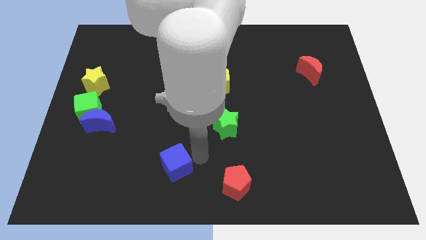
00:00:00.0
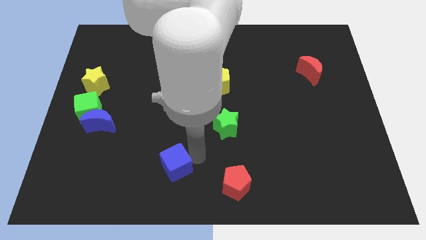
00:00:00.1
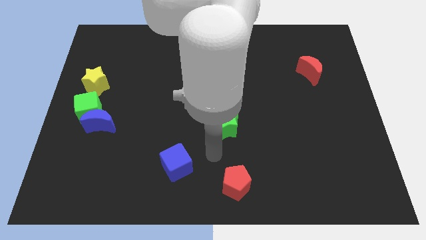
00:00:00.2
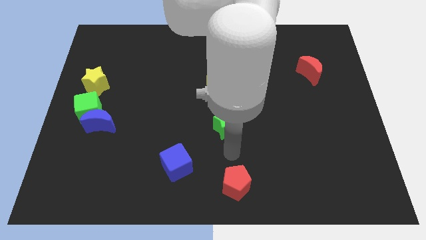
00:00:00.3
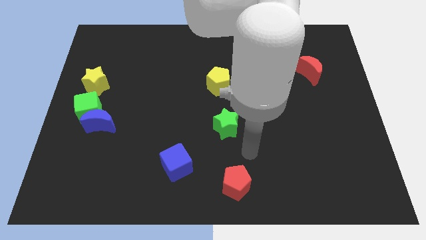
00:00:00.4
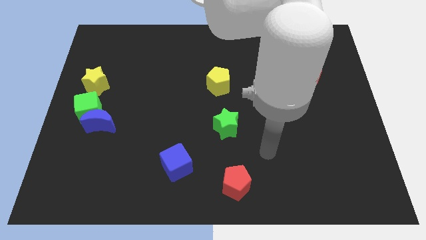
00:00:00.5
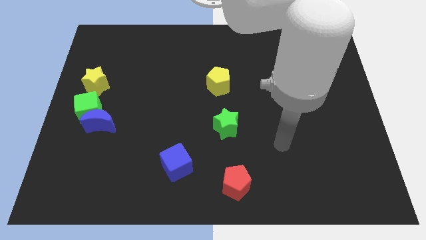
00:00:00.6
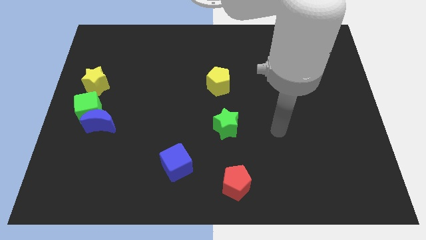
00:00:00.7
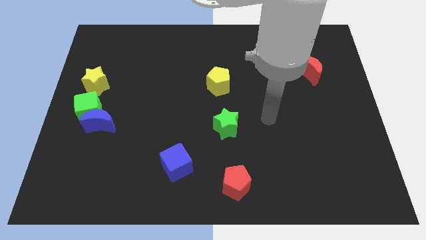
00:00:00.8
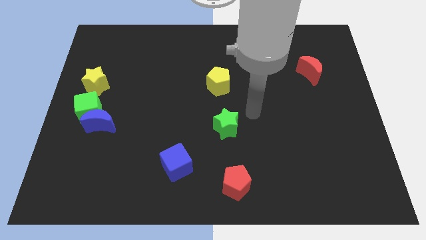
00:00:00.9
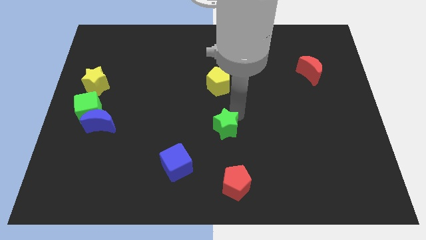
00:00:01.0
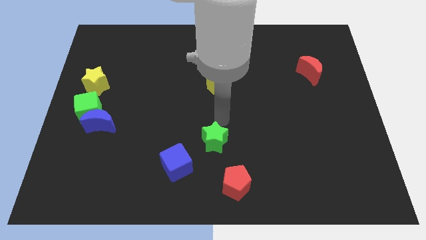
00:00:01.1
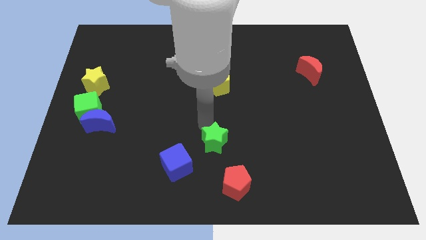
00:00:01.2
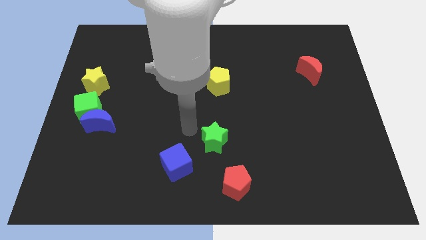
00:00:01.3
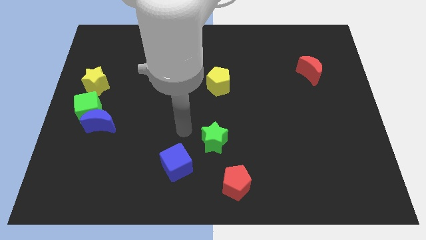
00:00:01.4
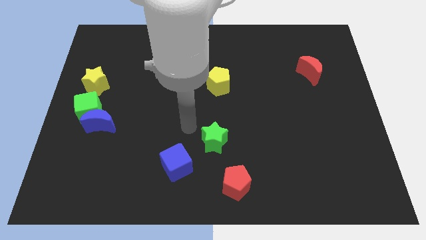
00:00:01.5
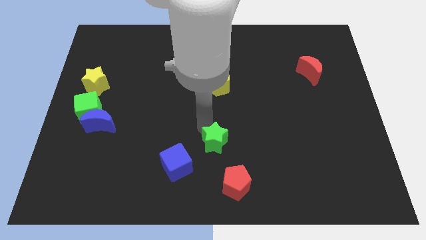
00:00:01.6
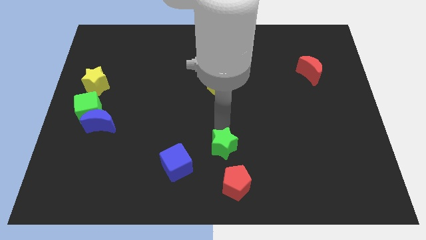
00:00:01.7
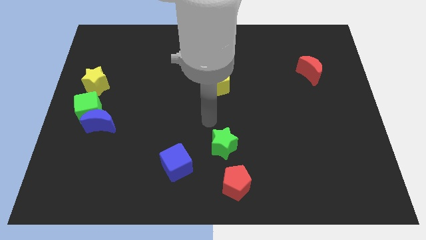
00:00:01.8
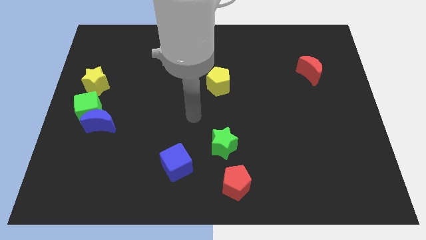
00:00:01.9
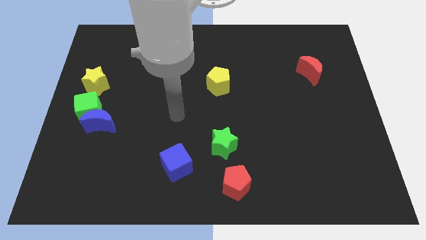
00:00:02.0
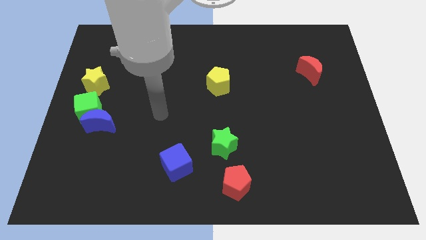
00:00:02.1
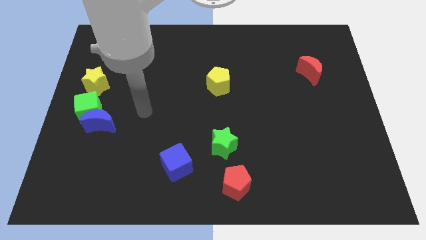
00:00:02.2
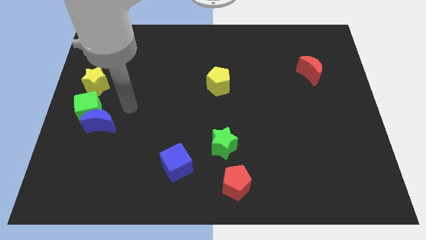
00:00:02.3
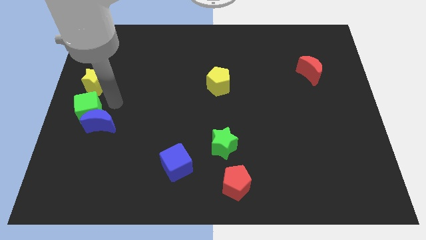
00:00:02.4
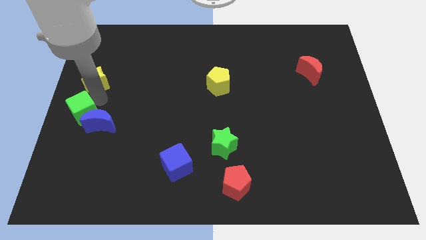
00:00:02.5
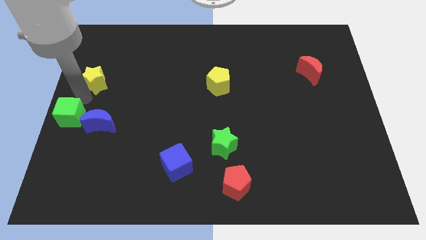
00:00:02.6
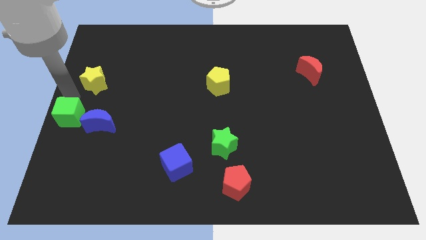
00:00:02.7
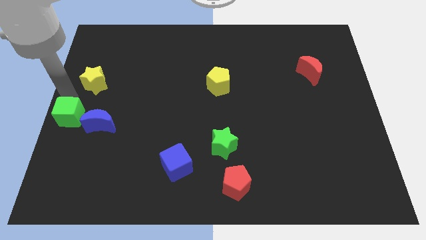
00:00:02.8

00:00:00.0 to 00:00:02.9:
make a triangle by moving green star

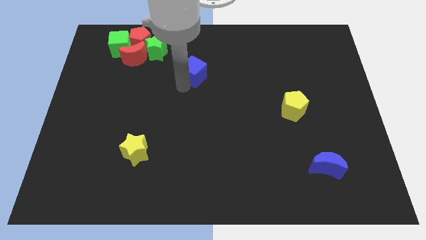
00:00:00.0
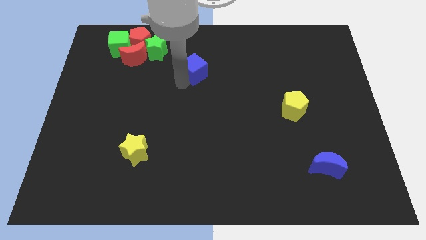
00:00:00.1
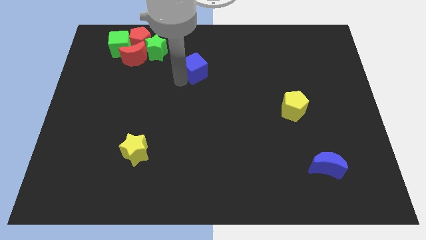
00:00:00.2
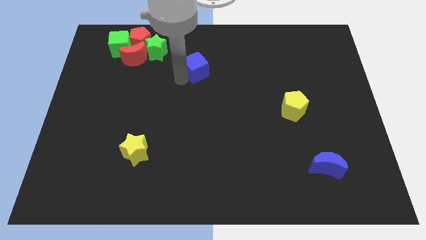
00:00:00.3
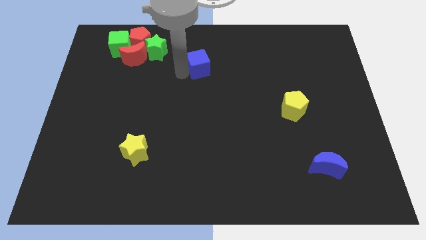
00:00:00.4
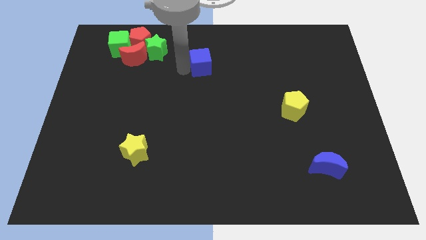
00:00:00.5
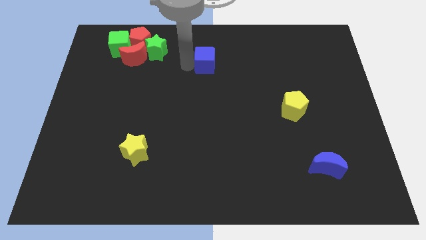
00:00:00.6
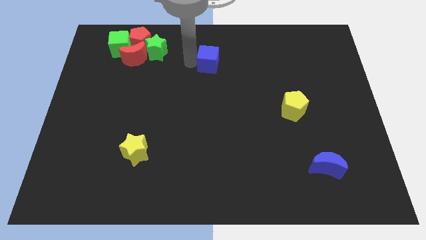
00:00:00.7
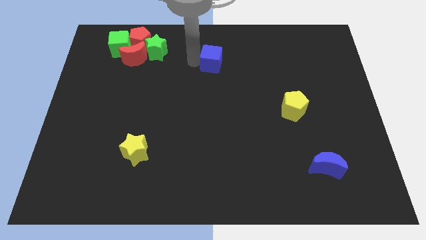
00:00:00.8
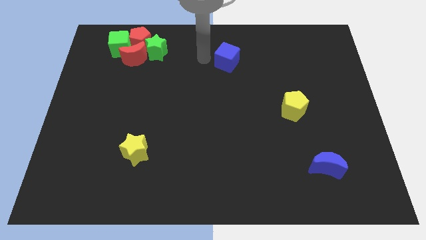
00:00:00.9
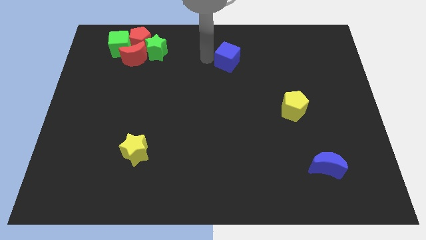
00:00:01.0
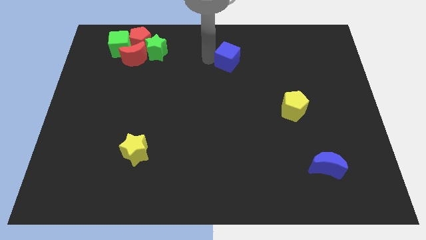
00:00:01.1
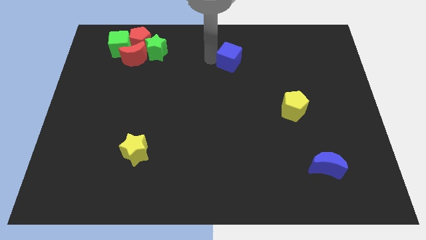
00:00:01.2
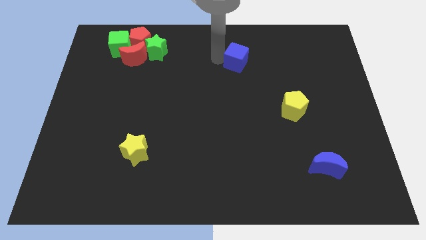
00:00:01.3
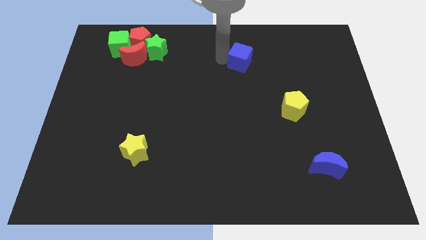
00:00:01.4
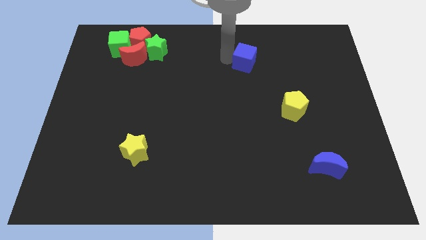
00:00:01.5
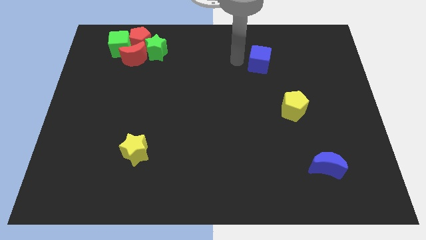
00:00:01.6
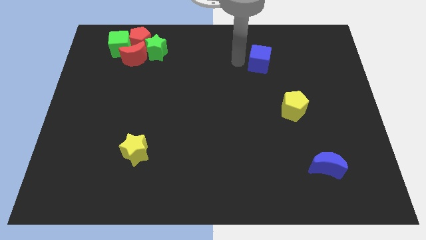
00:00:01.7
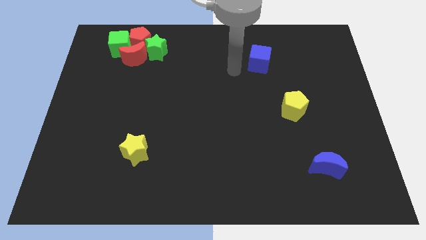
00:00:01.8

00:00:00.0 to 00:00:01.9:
place the blue cube to the right of the green star

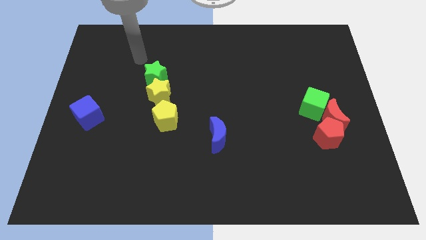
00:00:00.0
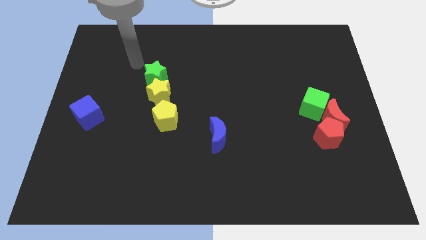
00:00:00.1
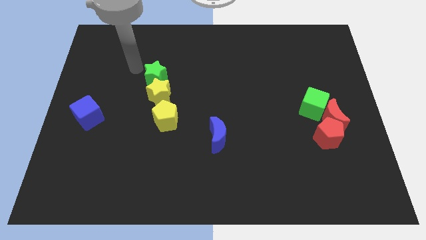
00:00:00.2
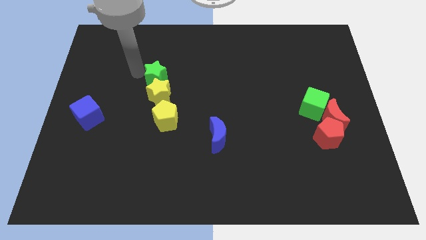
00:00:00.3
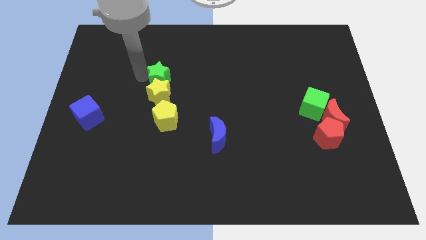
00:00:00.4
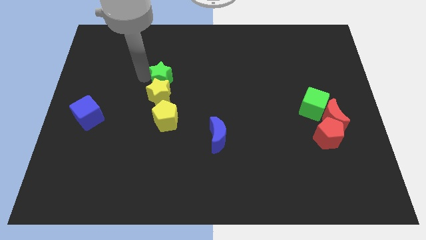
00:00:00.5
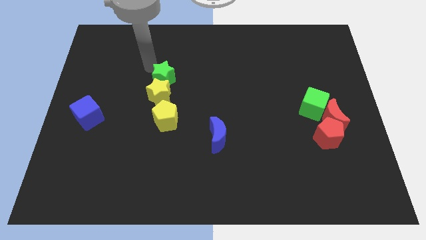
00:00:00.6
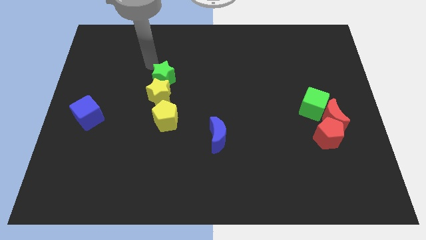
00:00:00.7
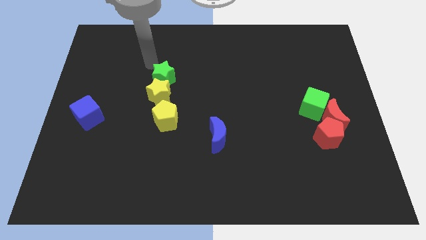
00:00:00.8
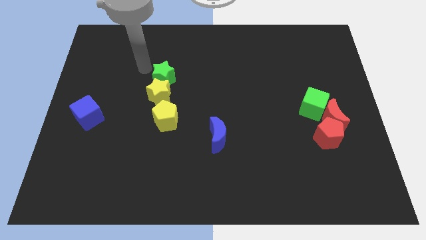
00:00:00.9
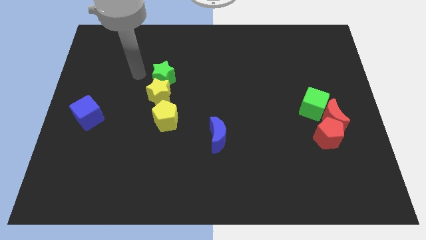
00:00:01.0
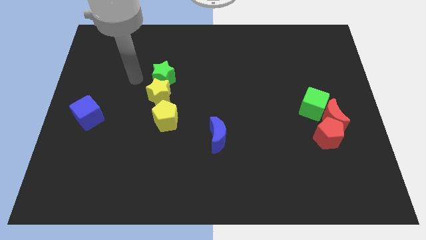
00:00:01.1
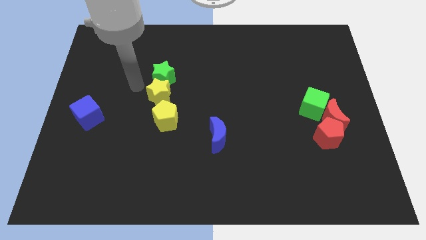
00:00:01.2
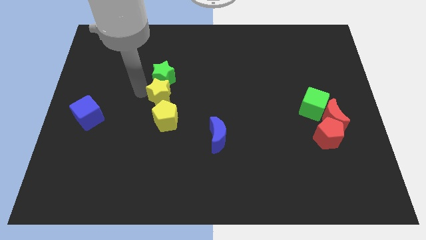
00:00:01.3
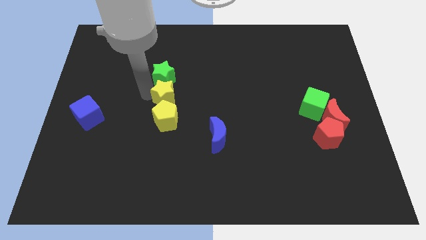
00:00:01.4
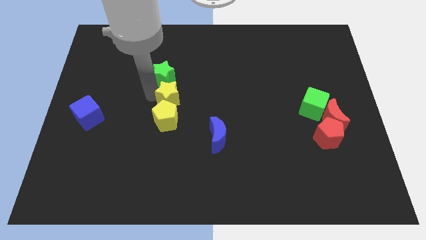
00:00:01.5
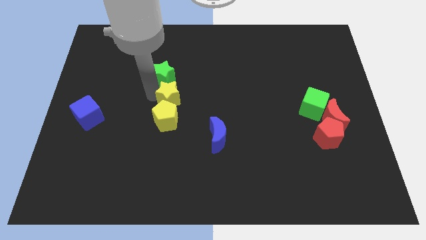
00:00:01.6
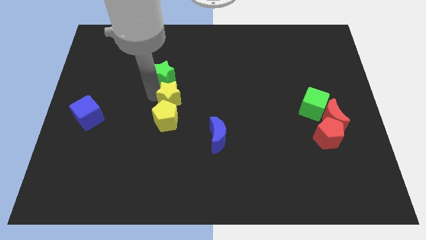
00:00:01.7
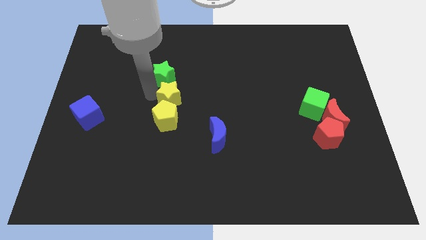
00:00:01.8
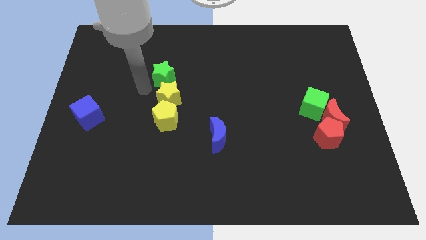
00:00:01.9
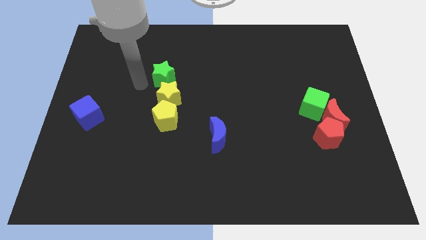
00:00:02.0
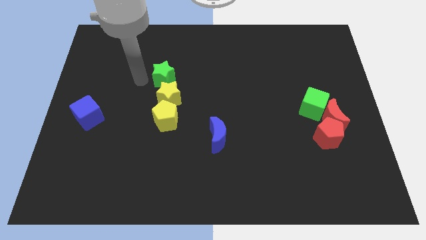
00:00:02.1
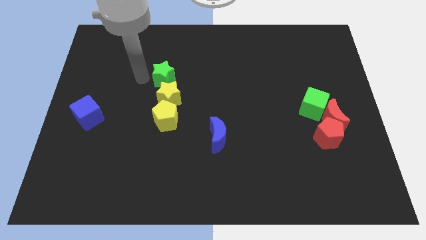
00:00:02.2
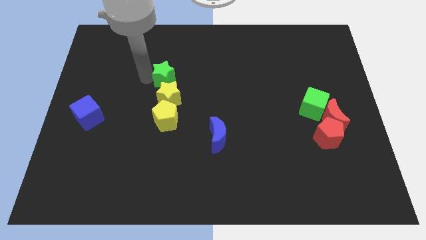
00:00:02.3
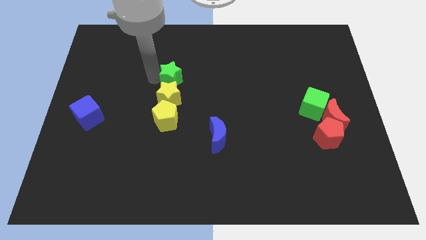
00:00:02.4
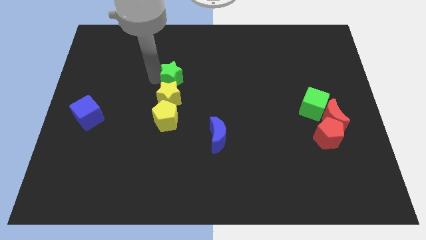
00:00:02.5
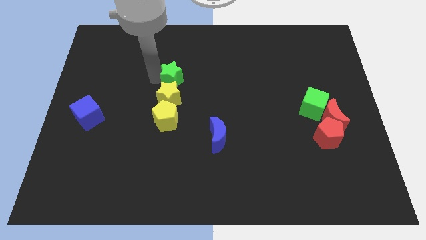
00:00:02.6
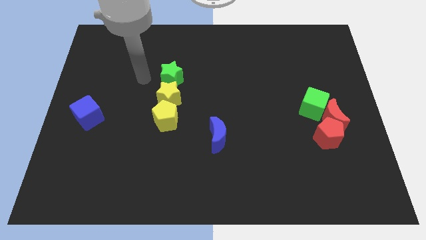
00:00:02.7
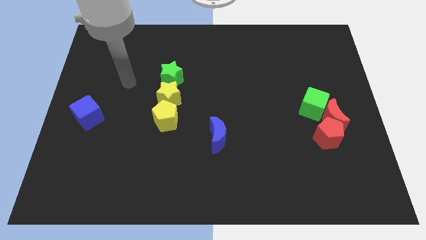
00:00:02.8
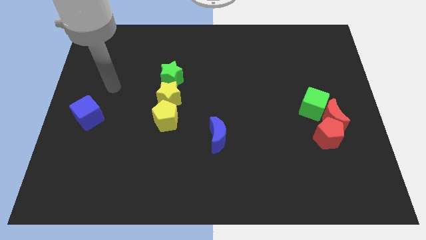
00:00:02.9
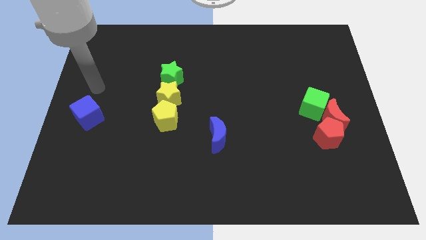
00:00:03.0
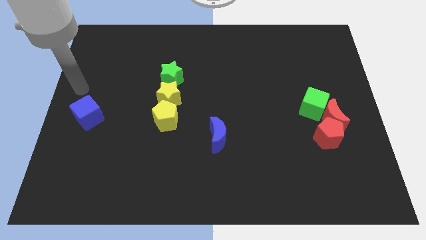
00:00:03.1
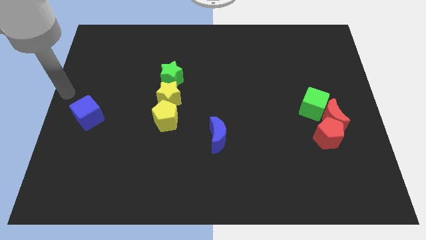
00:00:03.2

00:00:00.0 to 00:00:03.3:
slightly push the yellow star towards the right

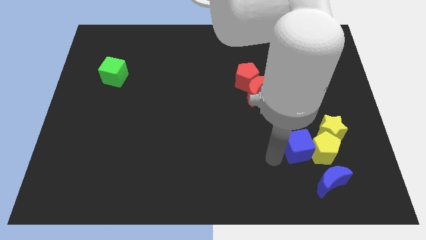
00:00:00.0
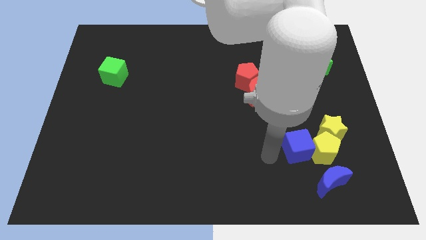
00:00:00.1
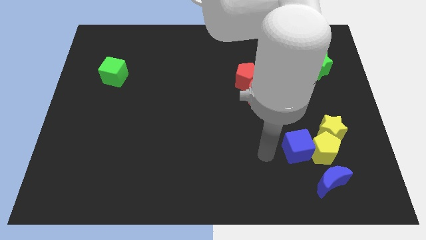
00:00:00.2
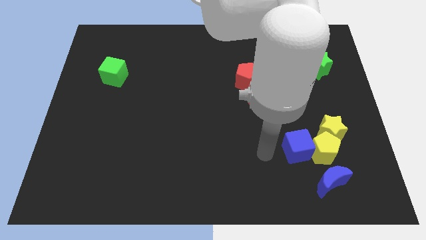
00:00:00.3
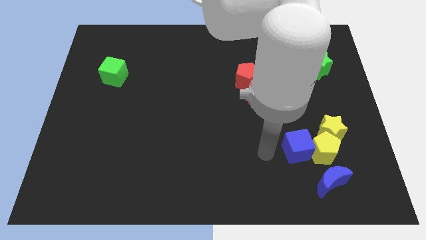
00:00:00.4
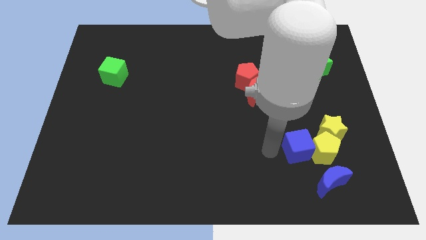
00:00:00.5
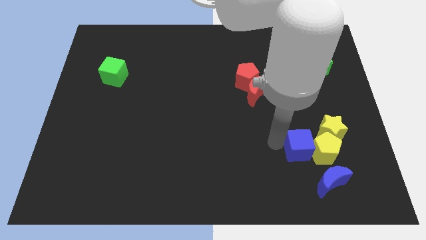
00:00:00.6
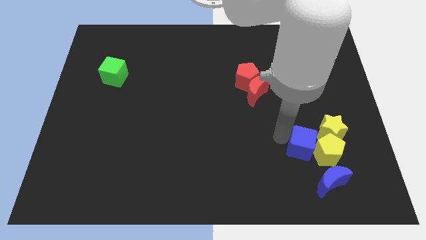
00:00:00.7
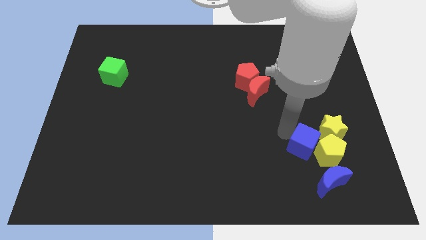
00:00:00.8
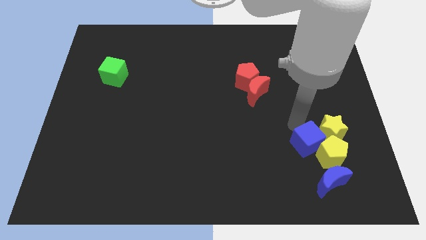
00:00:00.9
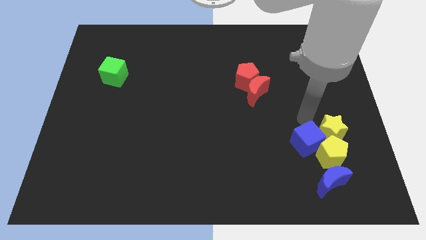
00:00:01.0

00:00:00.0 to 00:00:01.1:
place blue cube to the left top of the yellow pentagon
